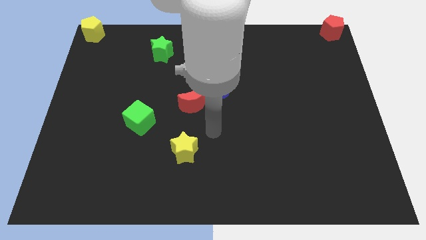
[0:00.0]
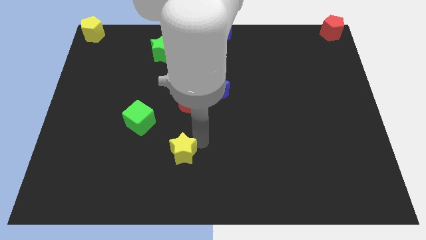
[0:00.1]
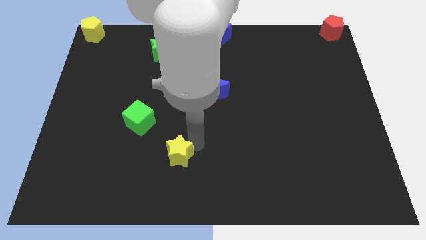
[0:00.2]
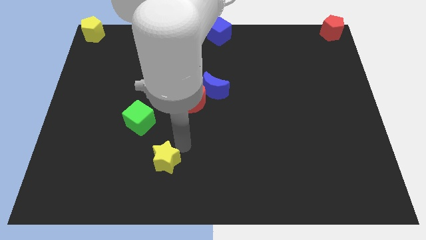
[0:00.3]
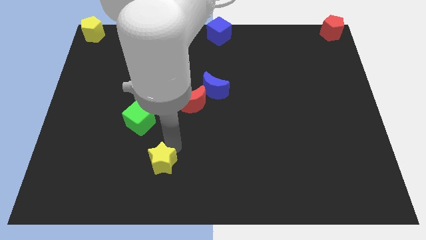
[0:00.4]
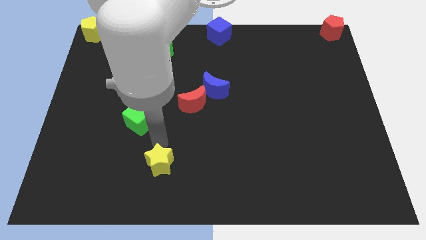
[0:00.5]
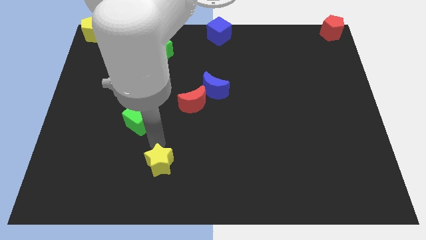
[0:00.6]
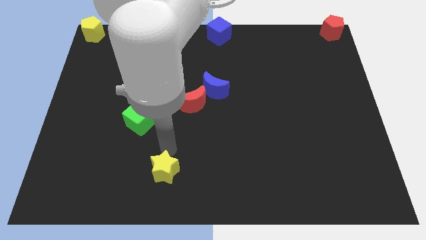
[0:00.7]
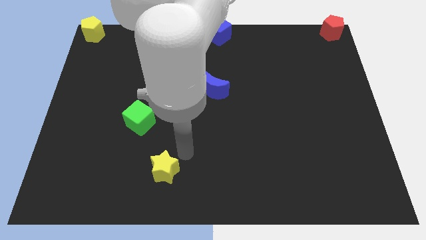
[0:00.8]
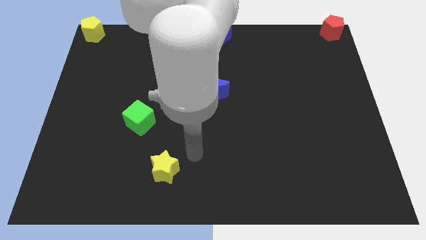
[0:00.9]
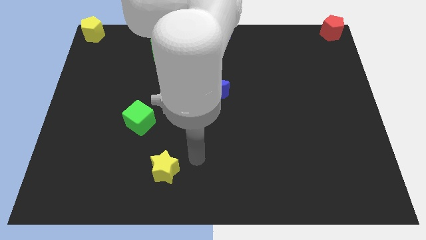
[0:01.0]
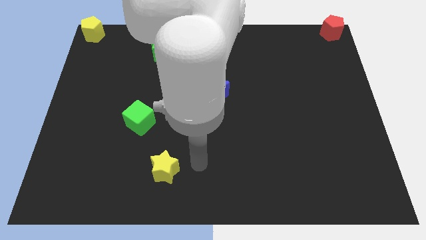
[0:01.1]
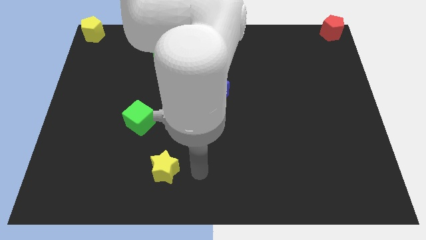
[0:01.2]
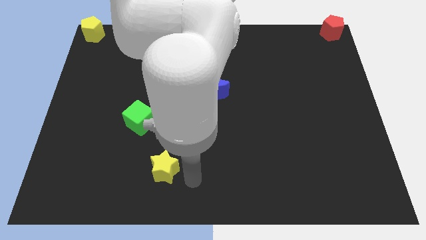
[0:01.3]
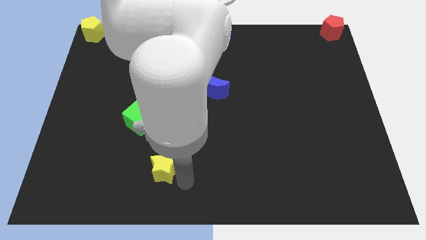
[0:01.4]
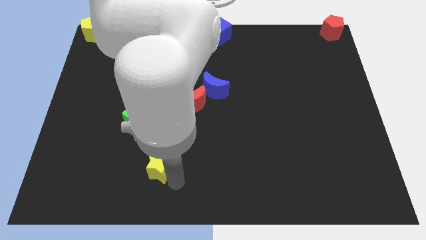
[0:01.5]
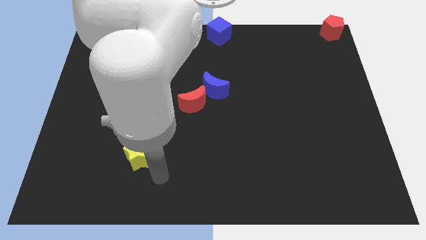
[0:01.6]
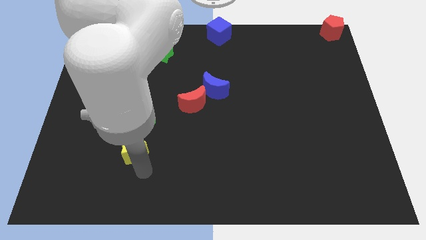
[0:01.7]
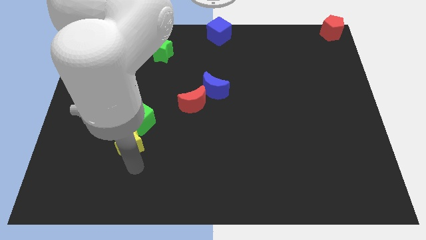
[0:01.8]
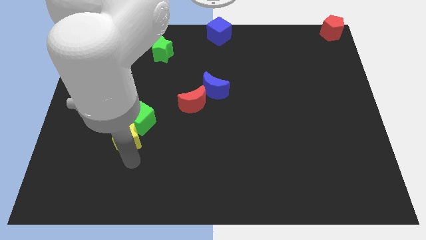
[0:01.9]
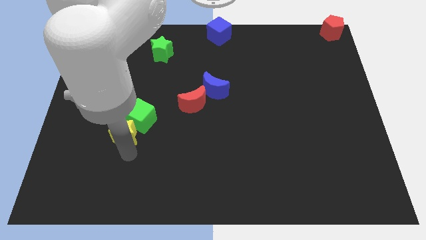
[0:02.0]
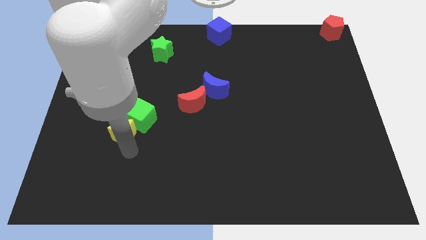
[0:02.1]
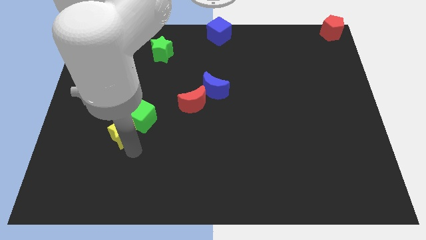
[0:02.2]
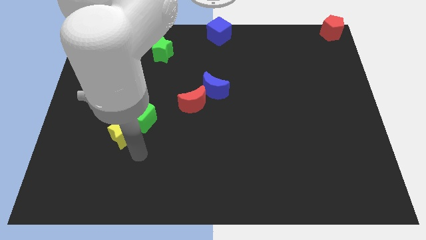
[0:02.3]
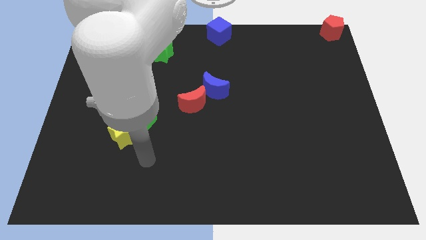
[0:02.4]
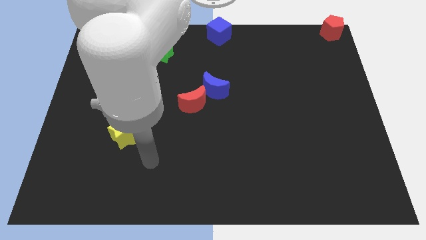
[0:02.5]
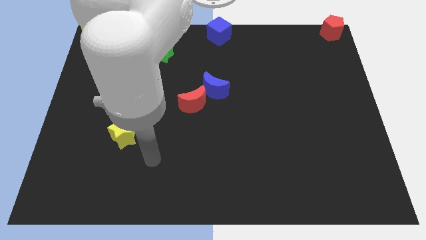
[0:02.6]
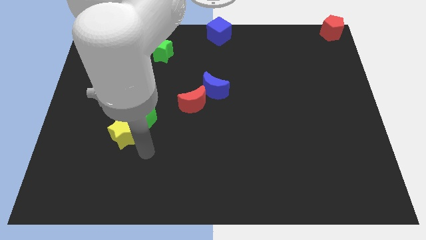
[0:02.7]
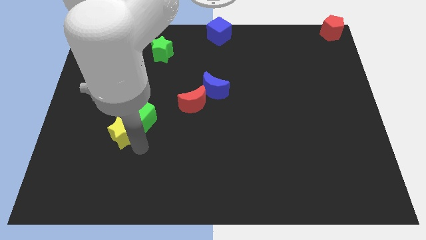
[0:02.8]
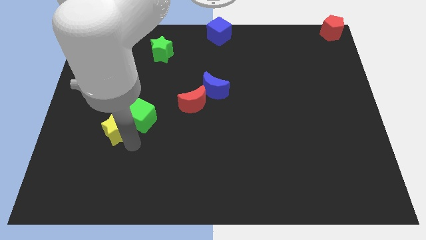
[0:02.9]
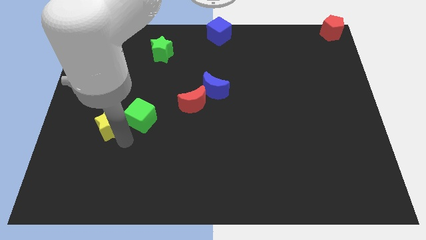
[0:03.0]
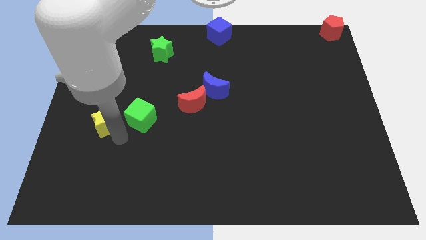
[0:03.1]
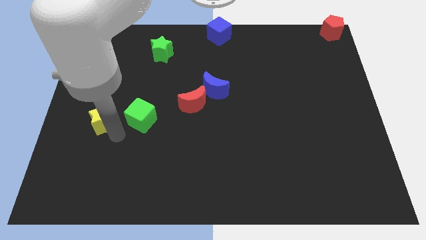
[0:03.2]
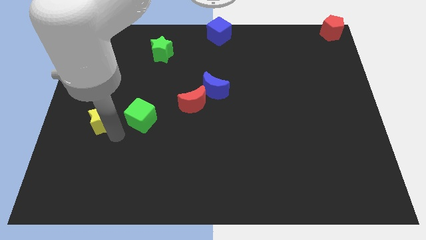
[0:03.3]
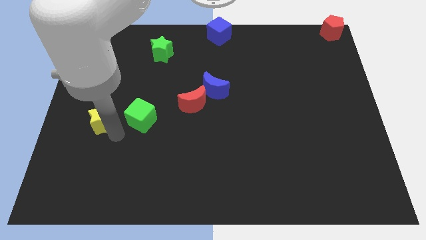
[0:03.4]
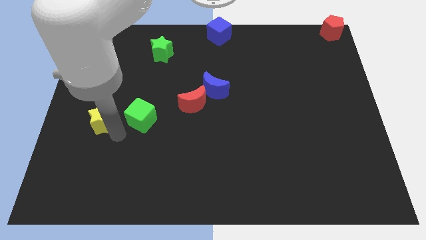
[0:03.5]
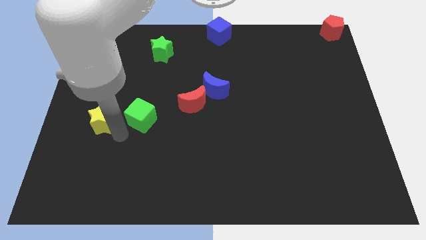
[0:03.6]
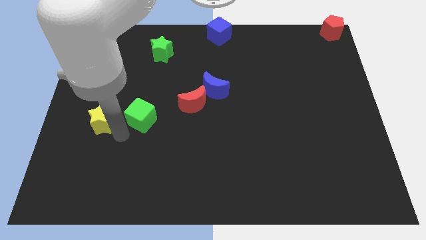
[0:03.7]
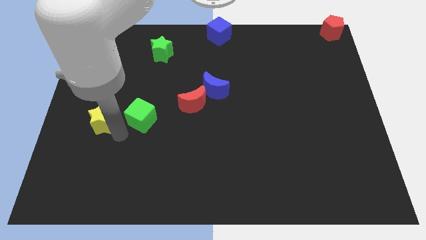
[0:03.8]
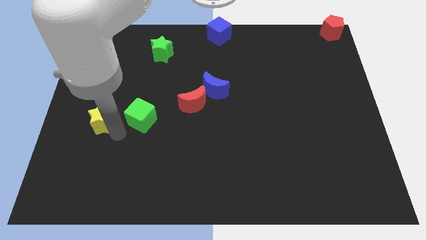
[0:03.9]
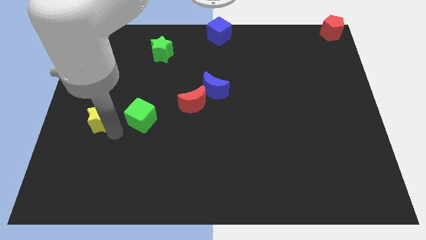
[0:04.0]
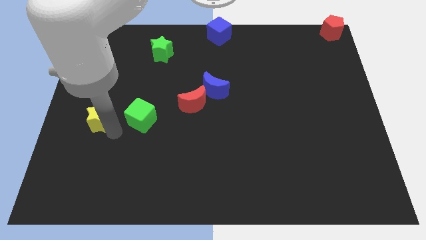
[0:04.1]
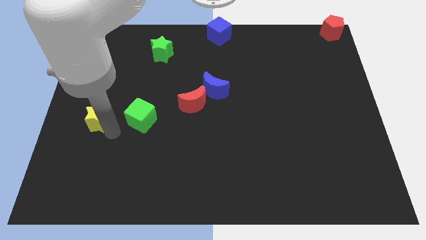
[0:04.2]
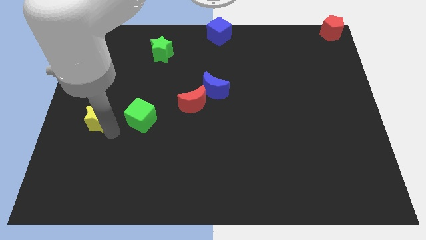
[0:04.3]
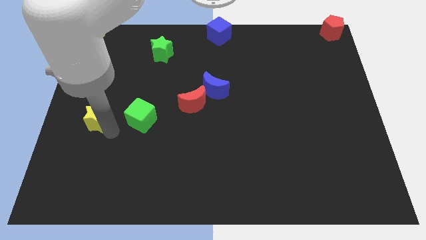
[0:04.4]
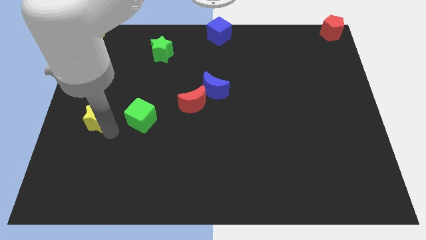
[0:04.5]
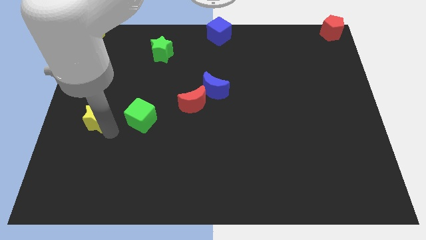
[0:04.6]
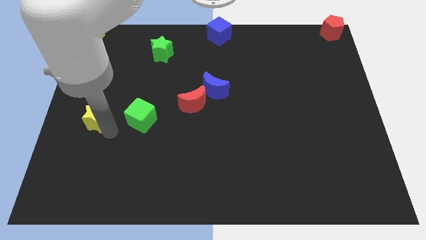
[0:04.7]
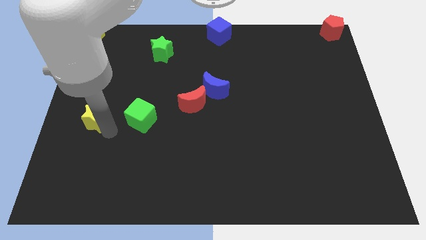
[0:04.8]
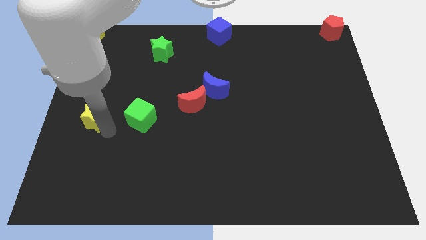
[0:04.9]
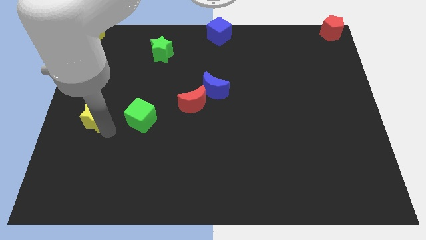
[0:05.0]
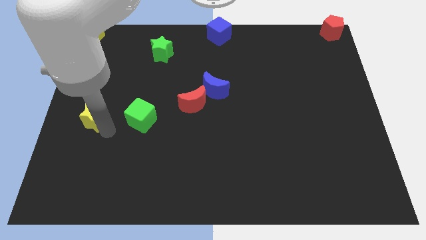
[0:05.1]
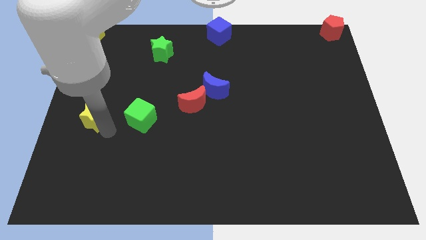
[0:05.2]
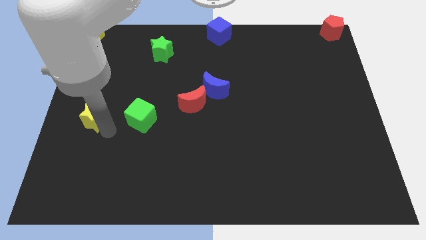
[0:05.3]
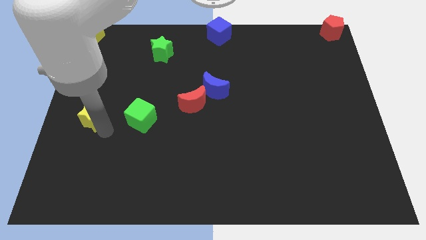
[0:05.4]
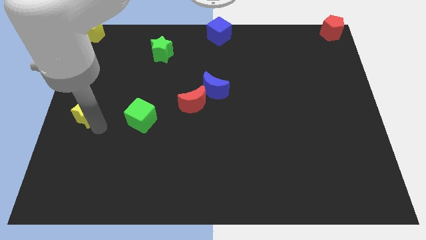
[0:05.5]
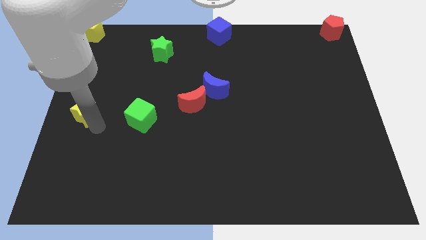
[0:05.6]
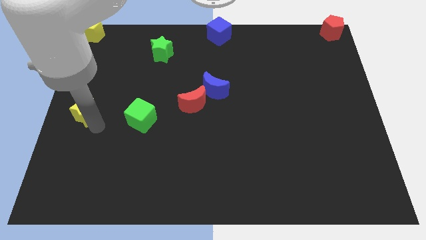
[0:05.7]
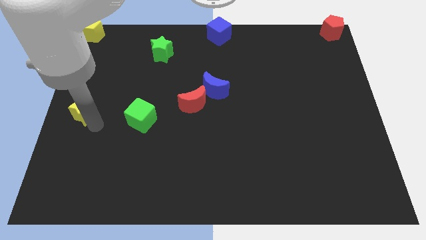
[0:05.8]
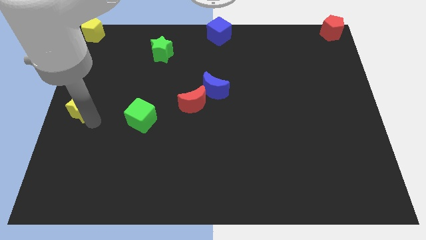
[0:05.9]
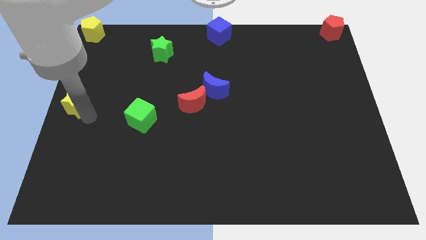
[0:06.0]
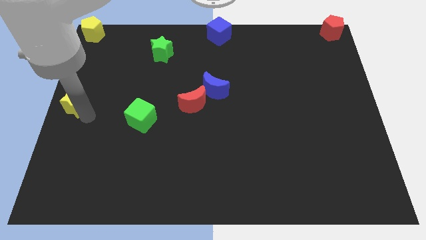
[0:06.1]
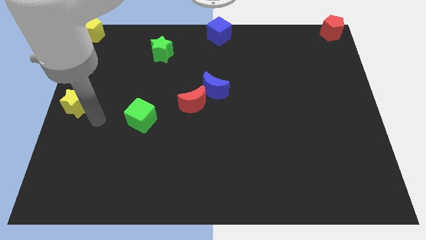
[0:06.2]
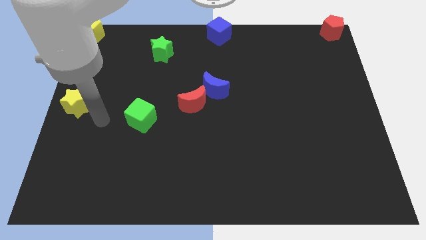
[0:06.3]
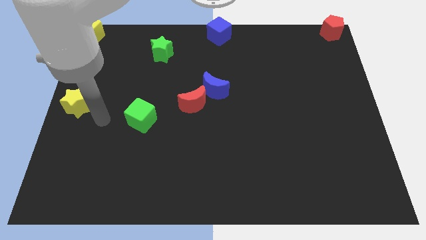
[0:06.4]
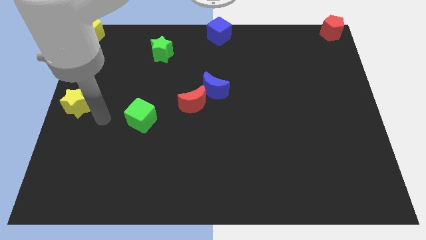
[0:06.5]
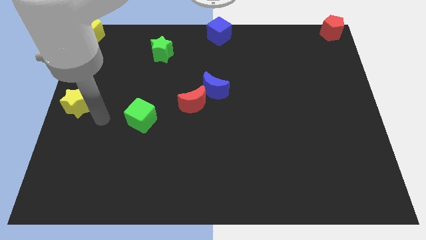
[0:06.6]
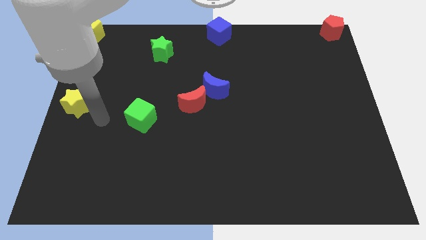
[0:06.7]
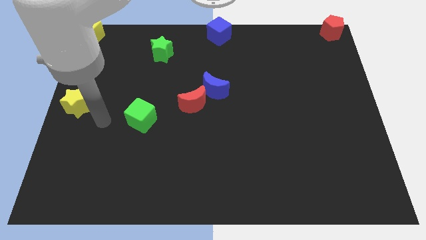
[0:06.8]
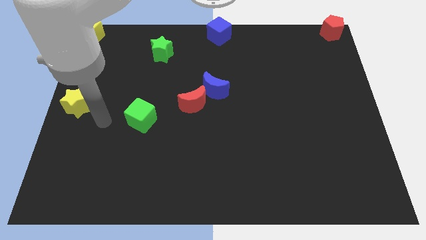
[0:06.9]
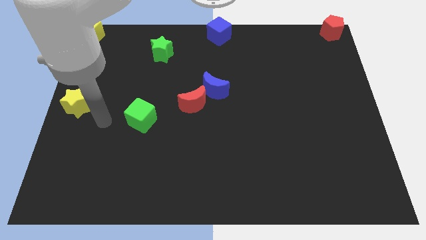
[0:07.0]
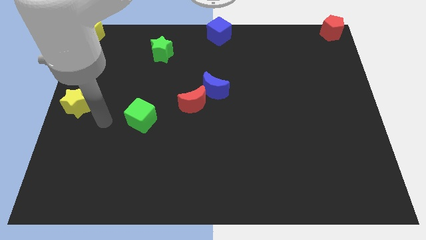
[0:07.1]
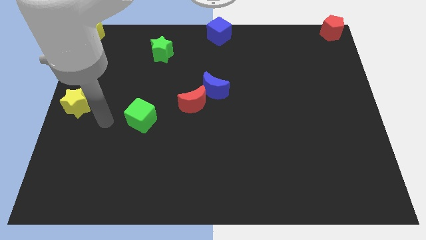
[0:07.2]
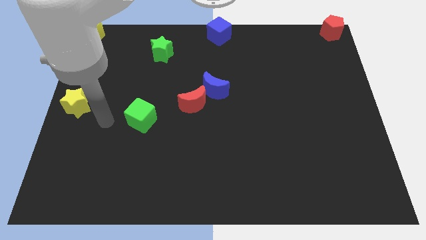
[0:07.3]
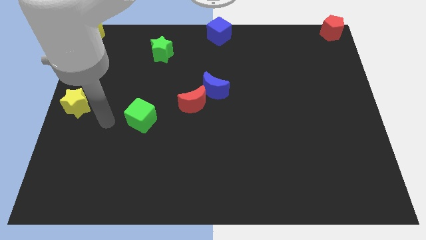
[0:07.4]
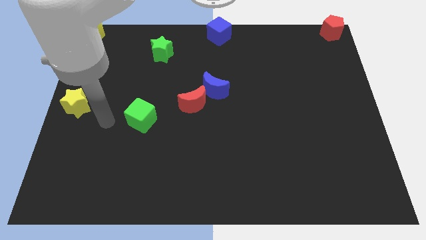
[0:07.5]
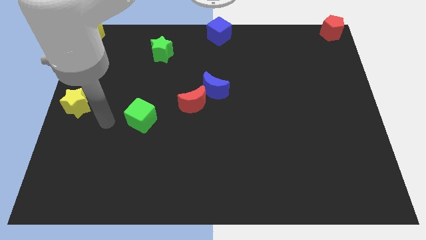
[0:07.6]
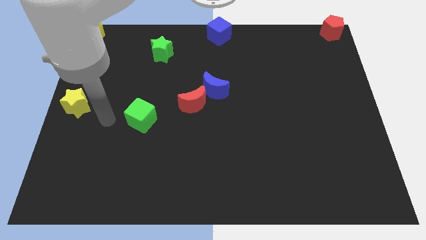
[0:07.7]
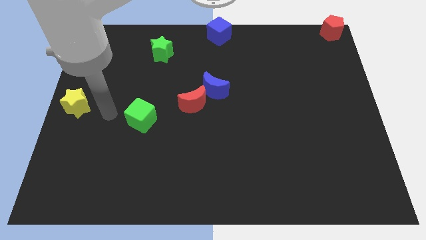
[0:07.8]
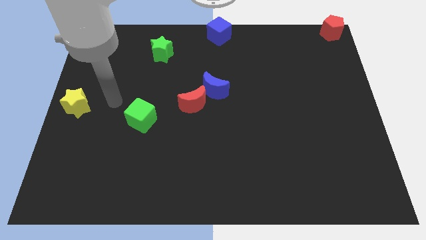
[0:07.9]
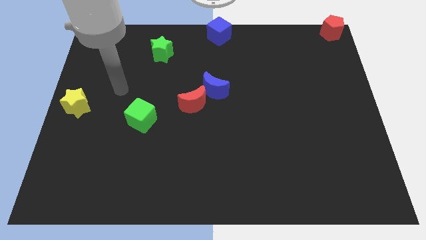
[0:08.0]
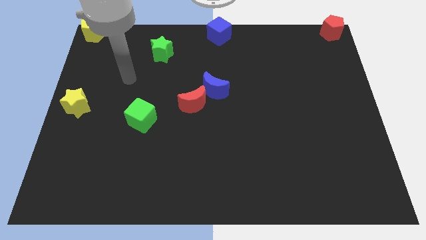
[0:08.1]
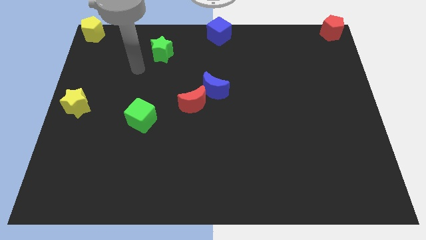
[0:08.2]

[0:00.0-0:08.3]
move the yellow star to the center left of the board

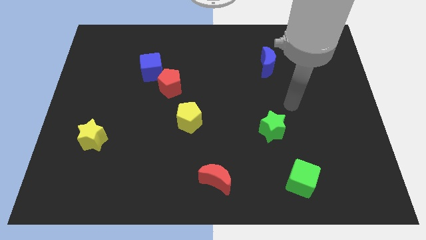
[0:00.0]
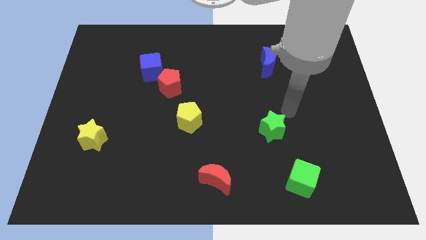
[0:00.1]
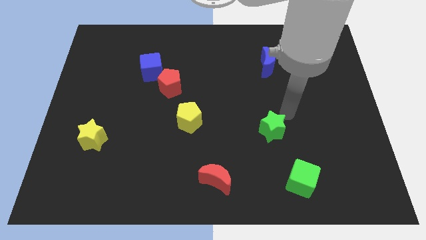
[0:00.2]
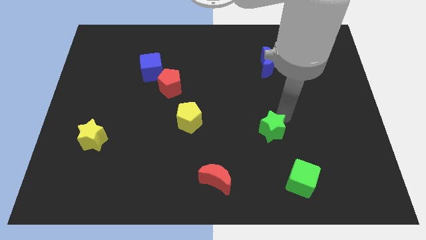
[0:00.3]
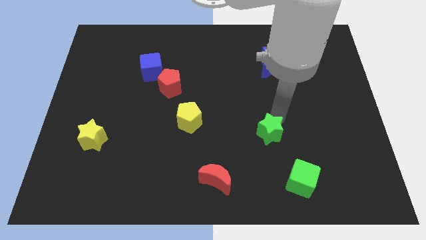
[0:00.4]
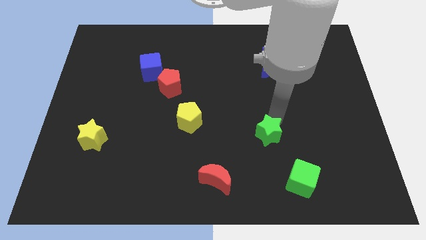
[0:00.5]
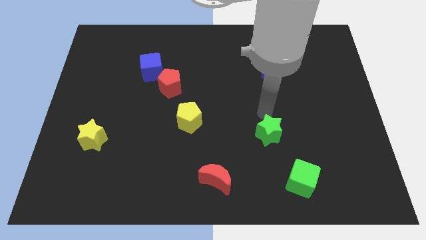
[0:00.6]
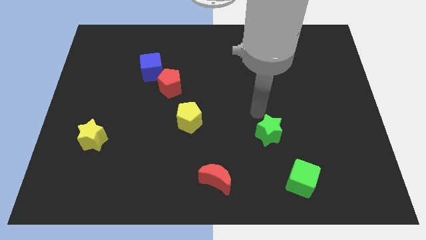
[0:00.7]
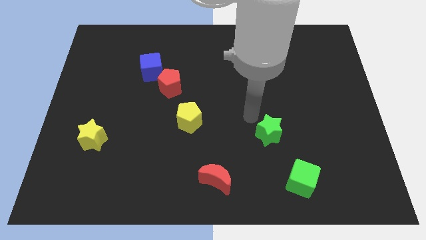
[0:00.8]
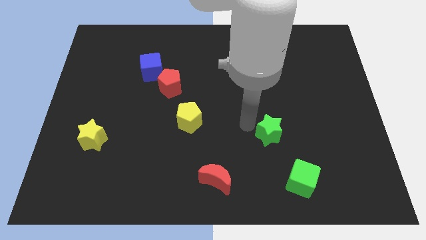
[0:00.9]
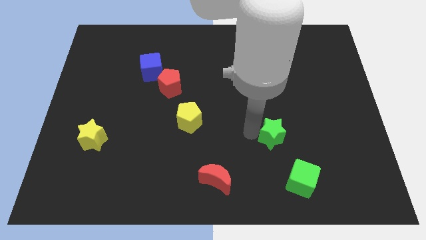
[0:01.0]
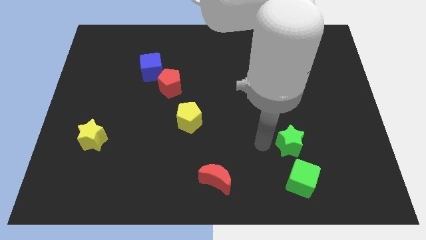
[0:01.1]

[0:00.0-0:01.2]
push the green star towards the green cube
